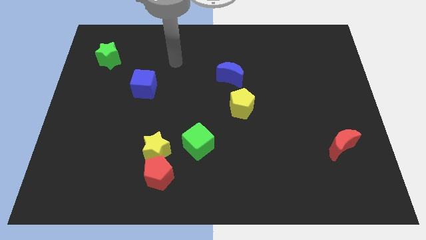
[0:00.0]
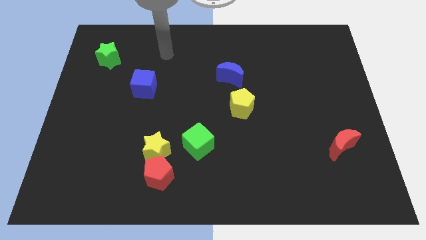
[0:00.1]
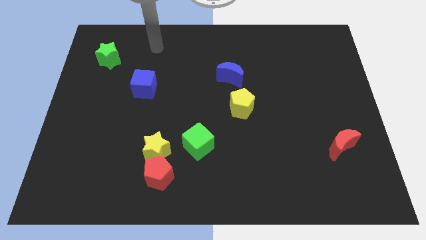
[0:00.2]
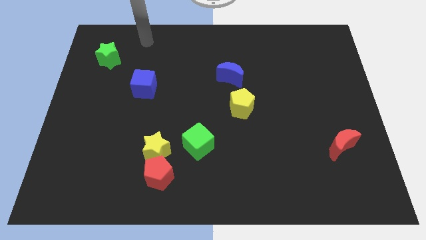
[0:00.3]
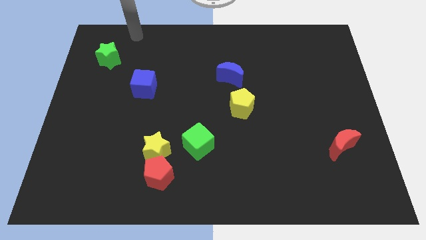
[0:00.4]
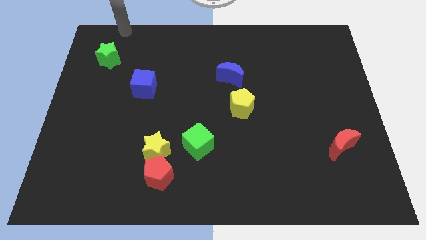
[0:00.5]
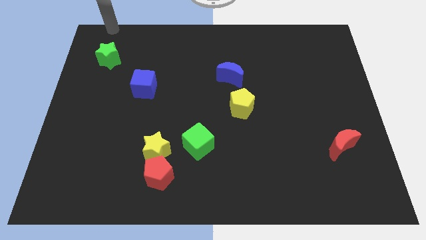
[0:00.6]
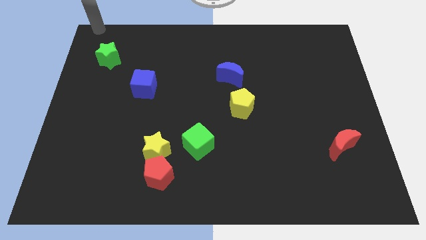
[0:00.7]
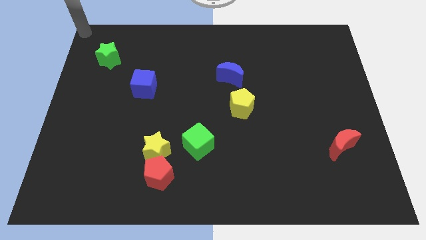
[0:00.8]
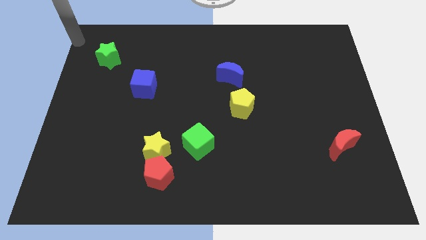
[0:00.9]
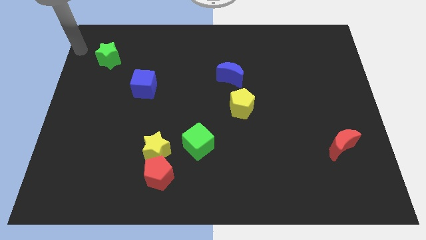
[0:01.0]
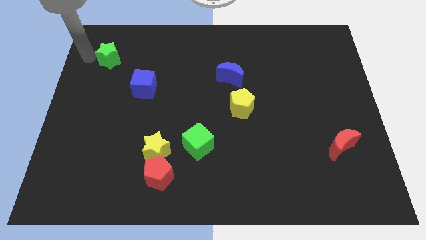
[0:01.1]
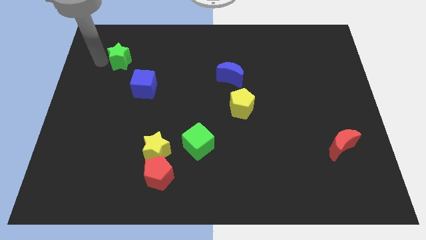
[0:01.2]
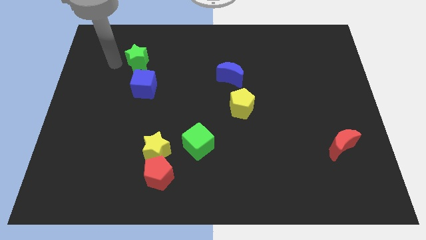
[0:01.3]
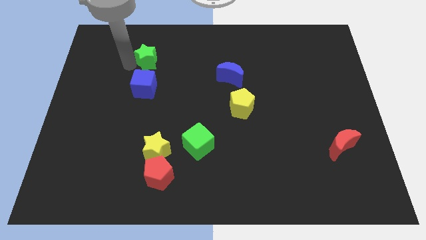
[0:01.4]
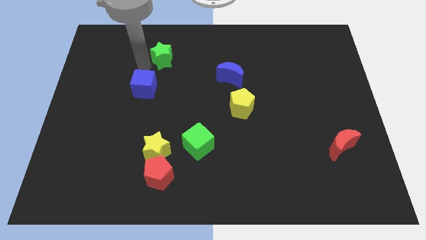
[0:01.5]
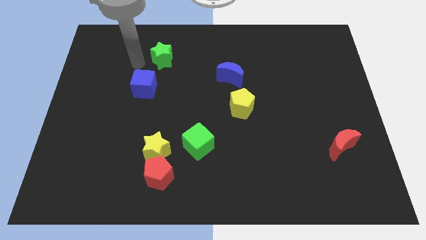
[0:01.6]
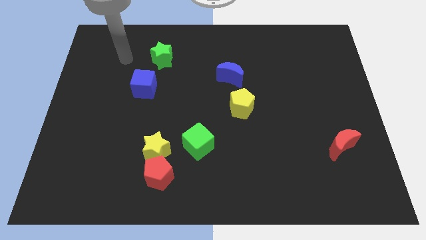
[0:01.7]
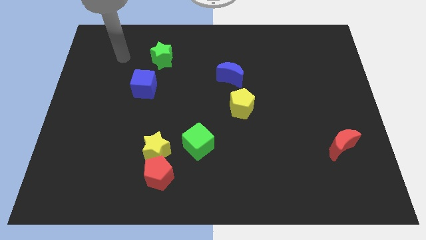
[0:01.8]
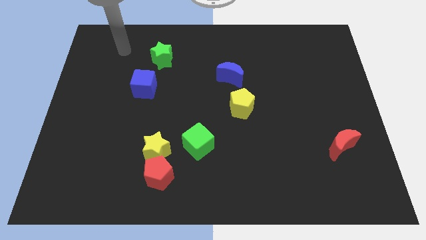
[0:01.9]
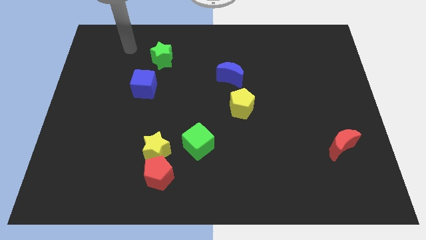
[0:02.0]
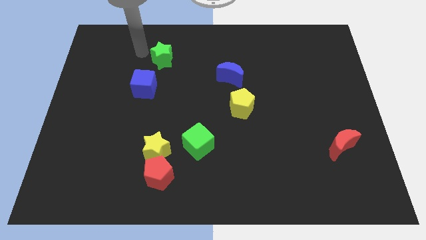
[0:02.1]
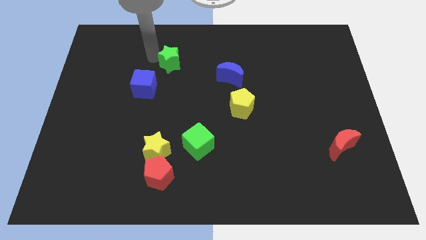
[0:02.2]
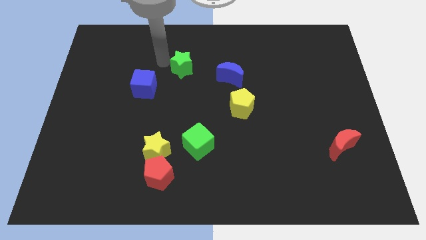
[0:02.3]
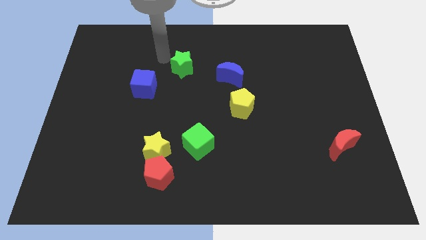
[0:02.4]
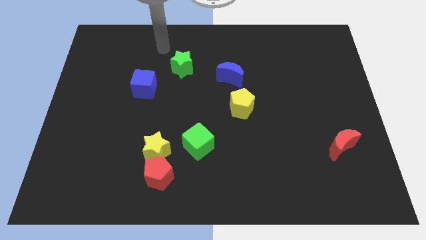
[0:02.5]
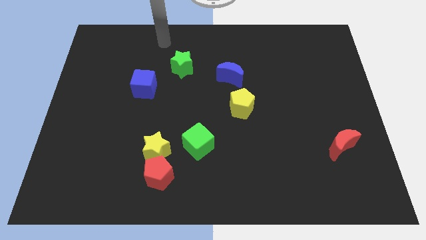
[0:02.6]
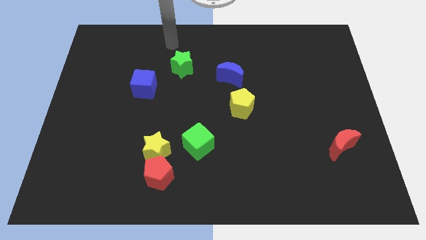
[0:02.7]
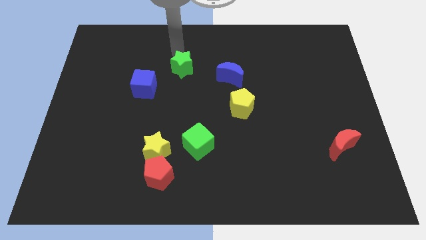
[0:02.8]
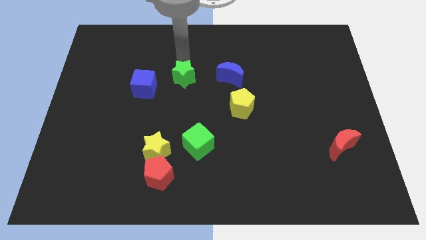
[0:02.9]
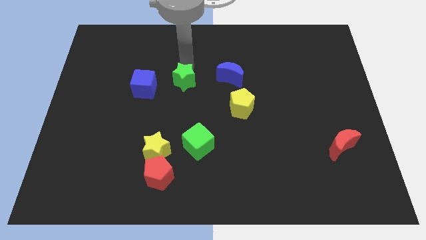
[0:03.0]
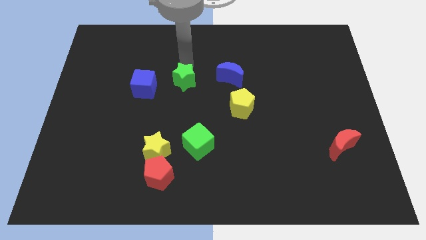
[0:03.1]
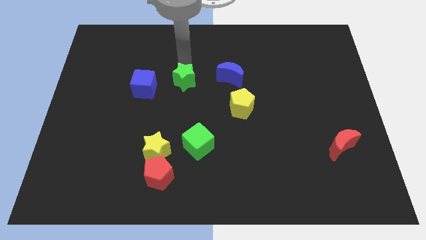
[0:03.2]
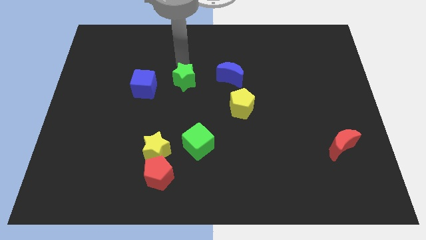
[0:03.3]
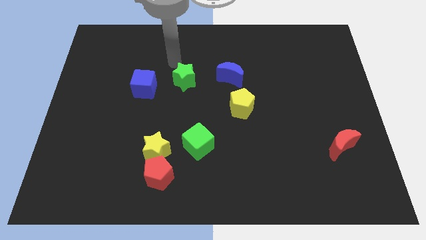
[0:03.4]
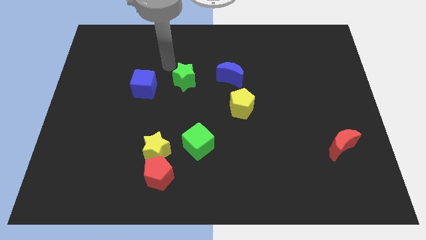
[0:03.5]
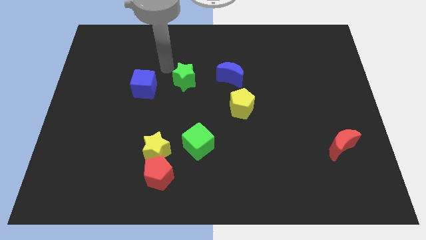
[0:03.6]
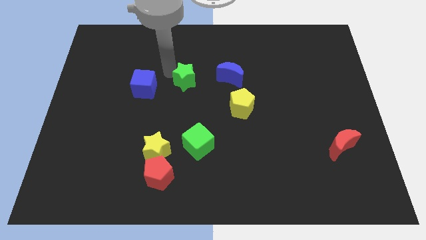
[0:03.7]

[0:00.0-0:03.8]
place the green star in between the blue moon and blue cube

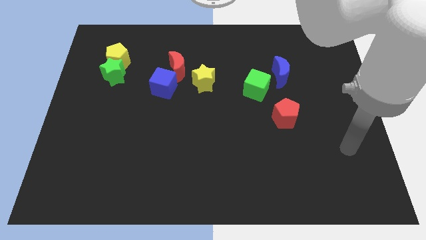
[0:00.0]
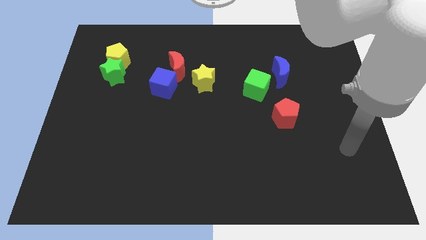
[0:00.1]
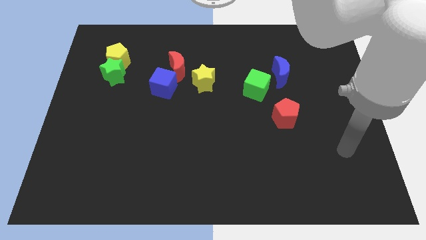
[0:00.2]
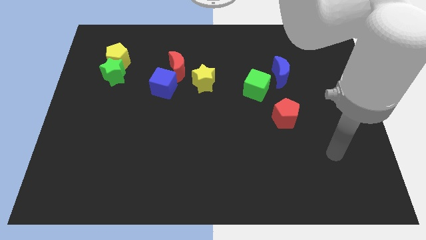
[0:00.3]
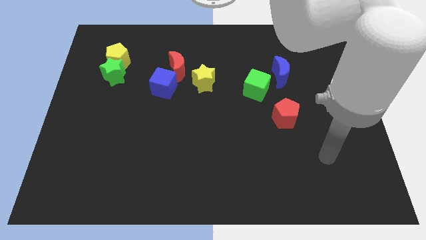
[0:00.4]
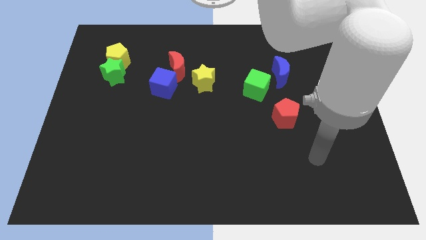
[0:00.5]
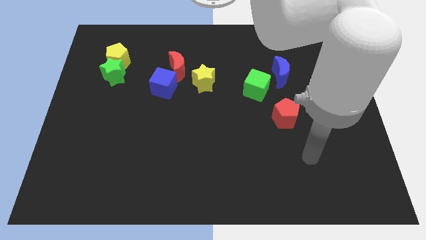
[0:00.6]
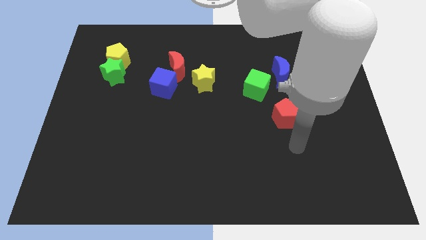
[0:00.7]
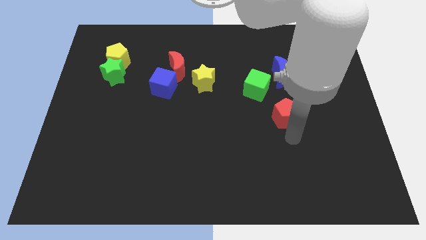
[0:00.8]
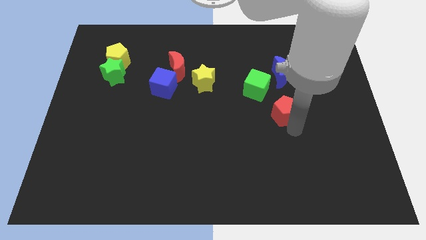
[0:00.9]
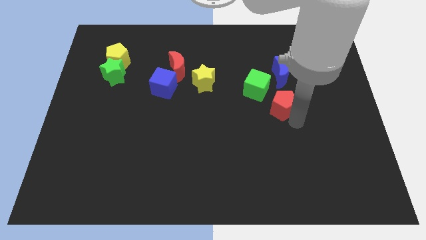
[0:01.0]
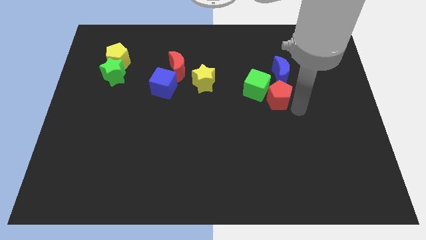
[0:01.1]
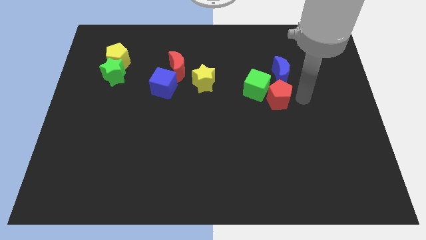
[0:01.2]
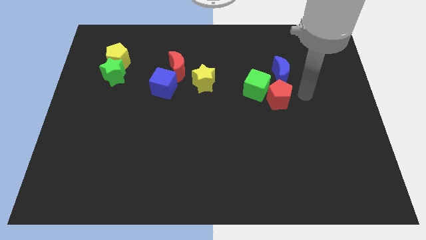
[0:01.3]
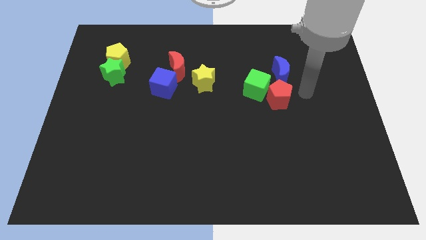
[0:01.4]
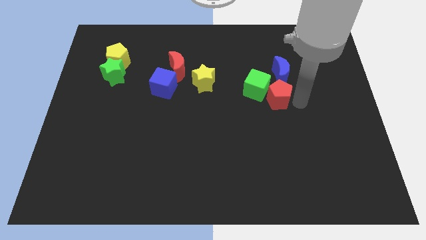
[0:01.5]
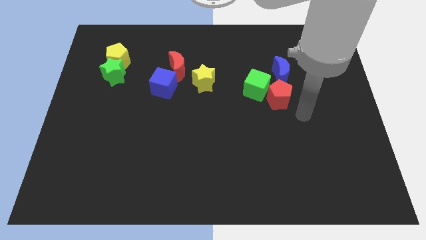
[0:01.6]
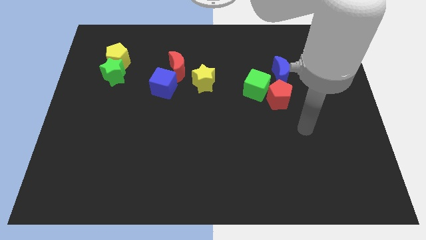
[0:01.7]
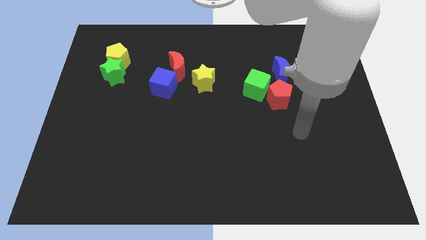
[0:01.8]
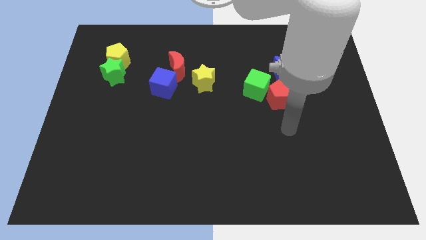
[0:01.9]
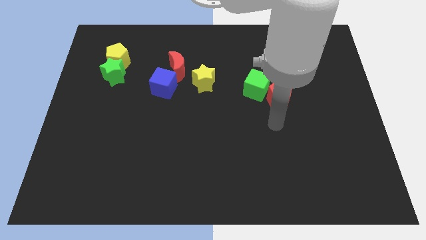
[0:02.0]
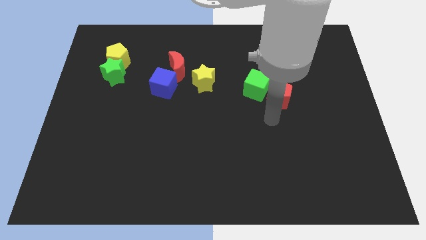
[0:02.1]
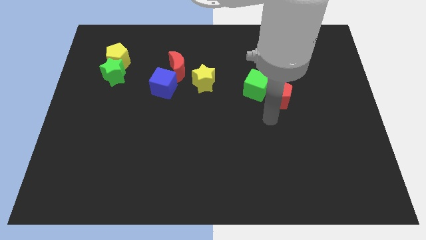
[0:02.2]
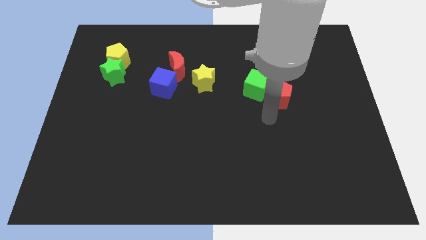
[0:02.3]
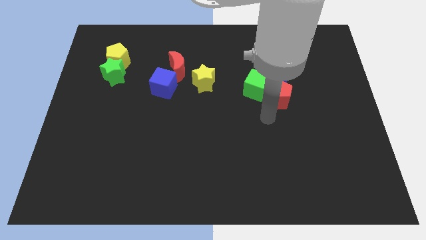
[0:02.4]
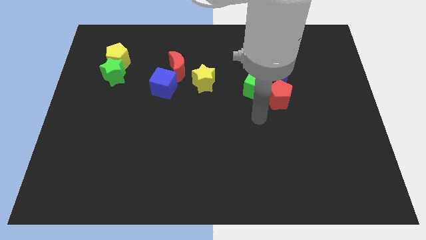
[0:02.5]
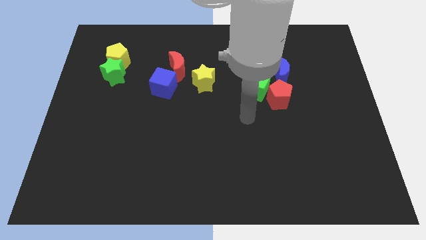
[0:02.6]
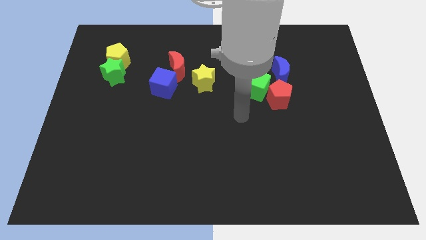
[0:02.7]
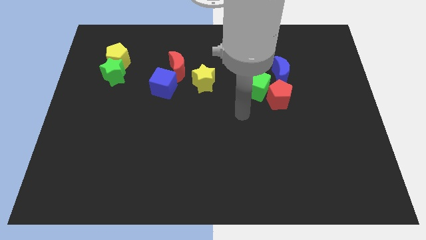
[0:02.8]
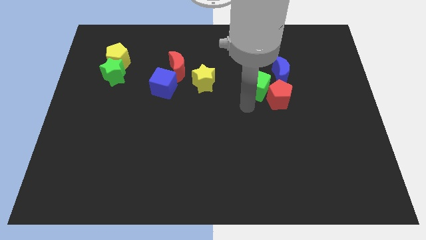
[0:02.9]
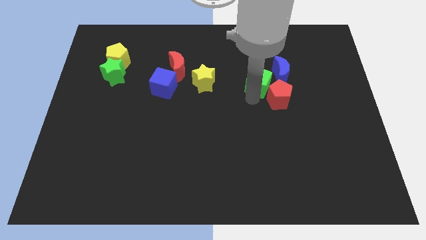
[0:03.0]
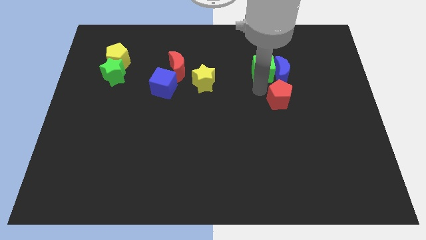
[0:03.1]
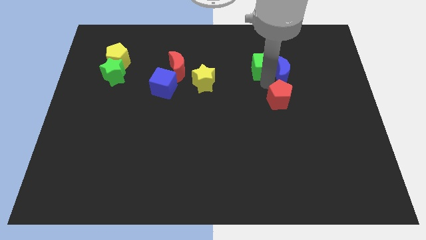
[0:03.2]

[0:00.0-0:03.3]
move the green cube into the blue crescent

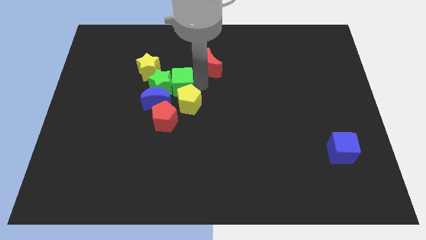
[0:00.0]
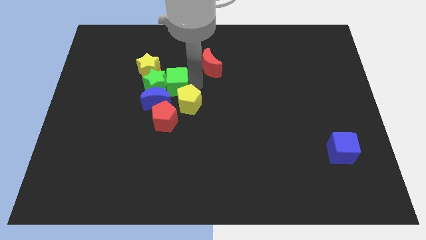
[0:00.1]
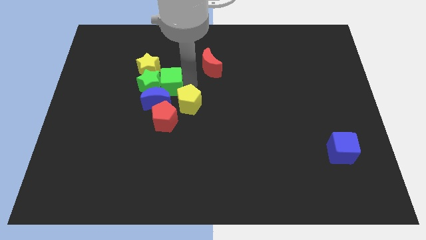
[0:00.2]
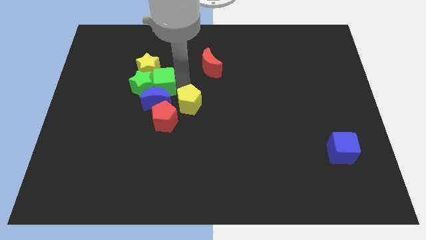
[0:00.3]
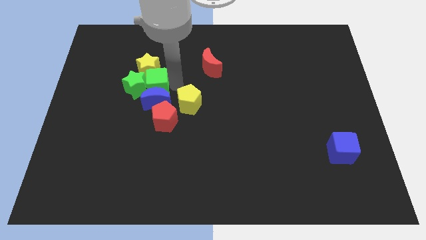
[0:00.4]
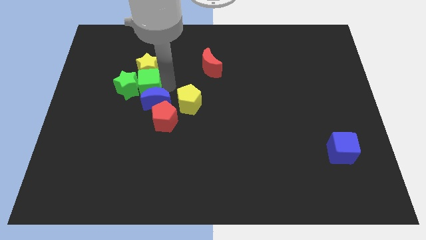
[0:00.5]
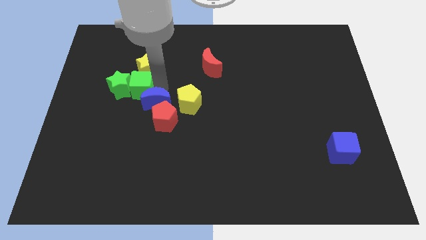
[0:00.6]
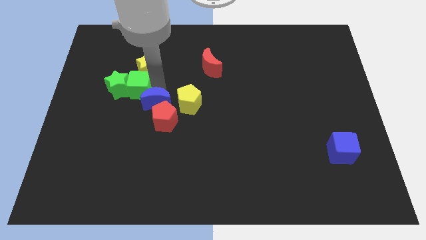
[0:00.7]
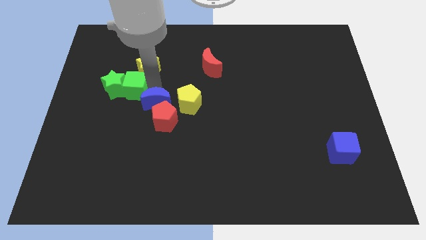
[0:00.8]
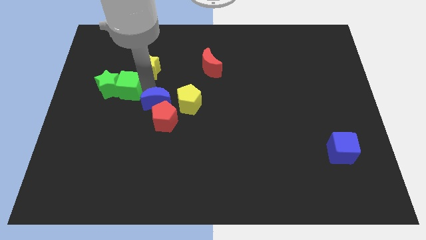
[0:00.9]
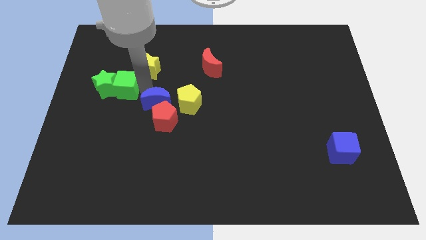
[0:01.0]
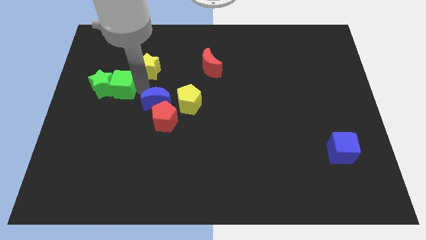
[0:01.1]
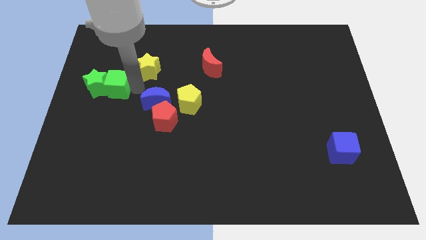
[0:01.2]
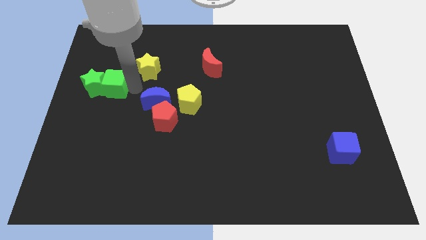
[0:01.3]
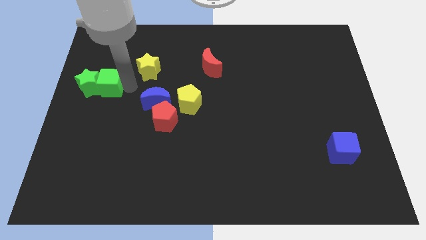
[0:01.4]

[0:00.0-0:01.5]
push the green star with the green cube towards the left center of the board

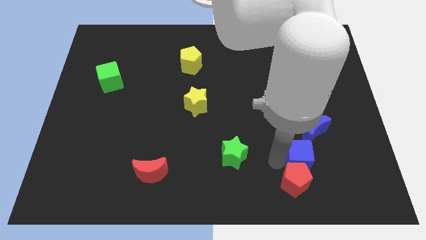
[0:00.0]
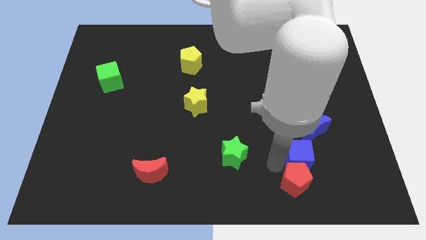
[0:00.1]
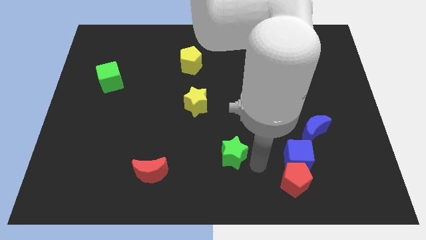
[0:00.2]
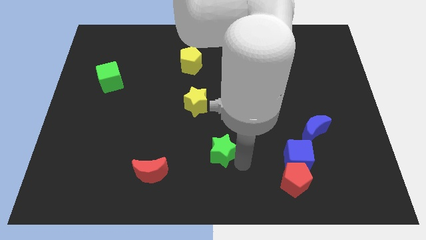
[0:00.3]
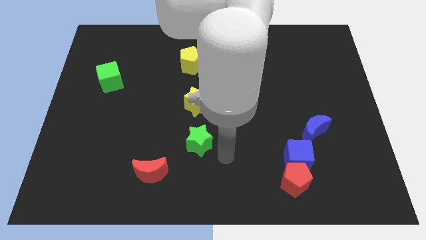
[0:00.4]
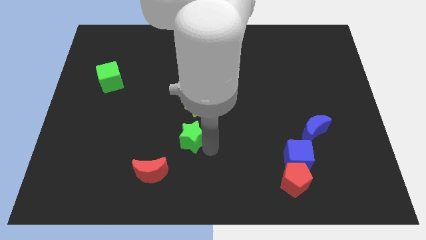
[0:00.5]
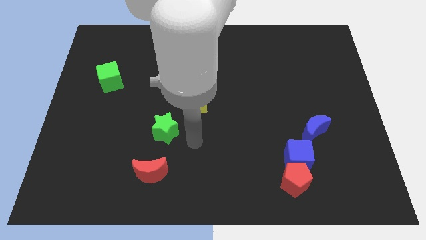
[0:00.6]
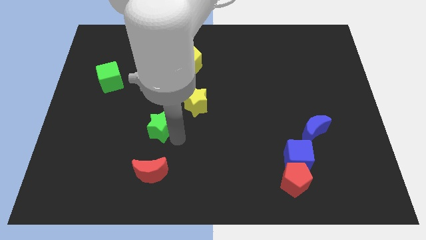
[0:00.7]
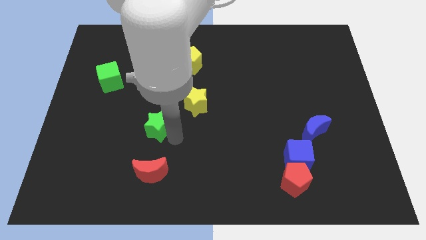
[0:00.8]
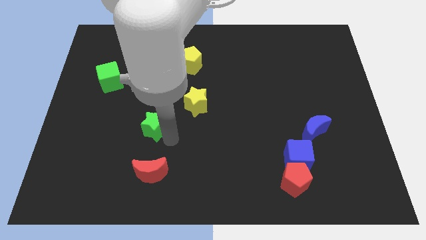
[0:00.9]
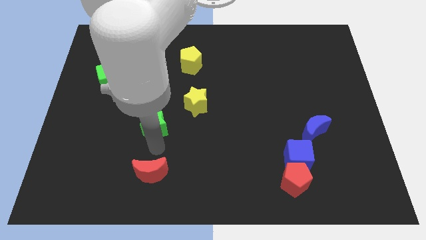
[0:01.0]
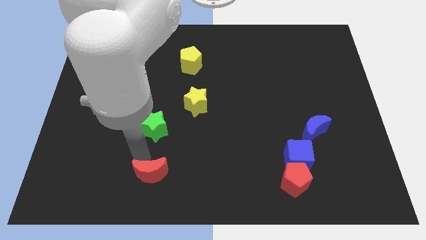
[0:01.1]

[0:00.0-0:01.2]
push the green star to the left of the board
